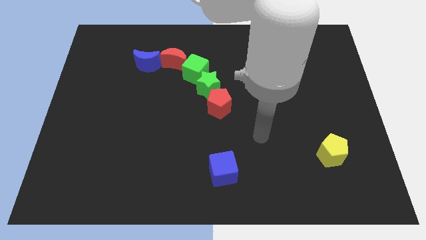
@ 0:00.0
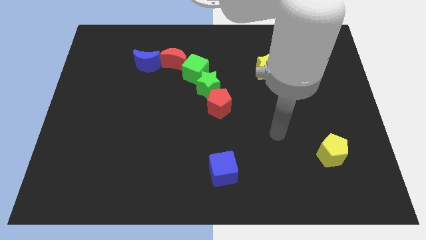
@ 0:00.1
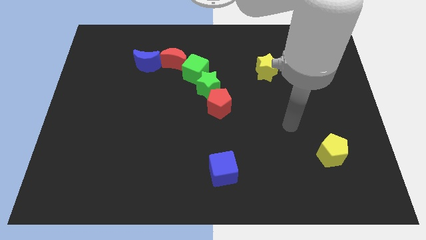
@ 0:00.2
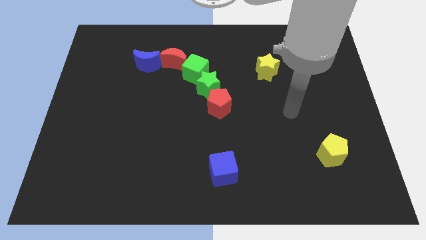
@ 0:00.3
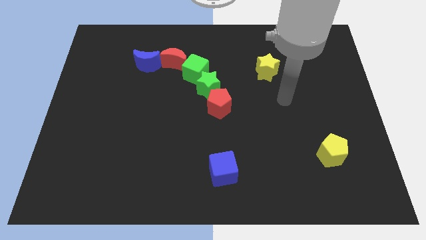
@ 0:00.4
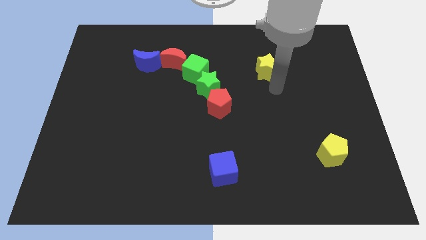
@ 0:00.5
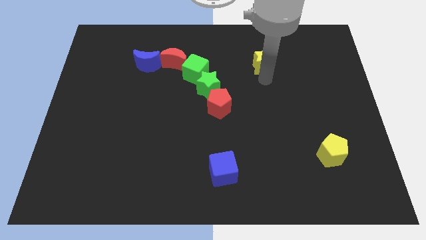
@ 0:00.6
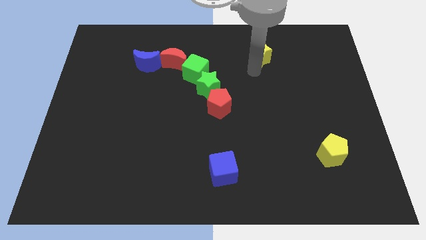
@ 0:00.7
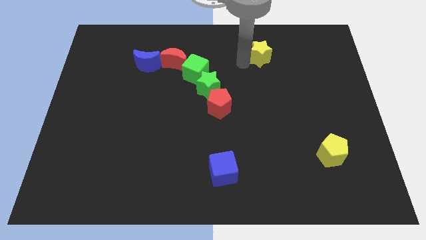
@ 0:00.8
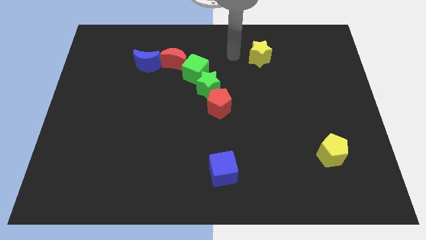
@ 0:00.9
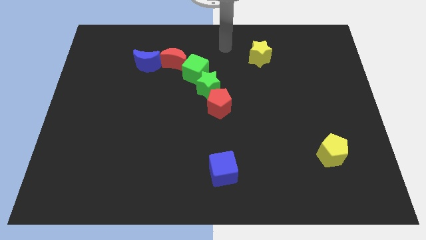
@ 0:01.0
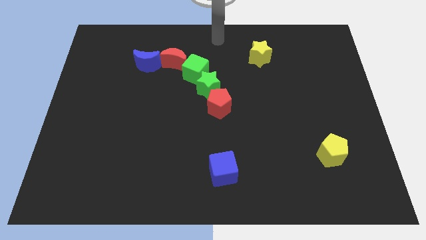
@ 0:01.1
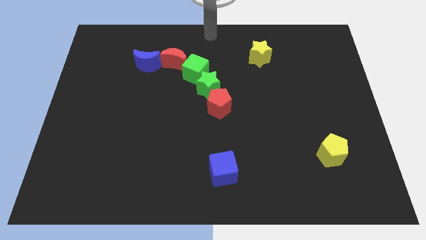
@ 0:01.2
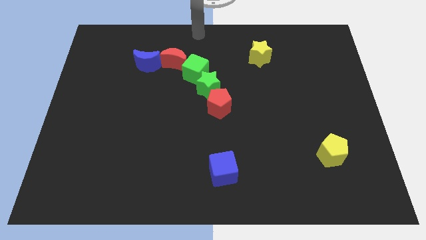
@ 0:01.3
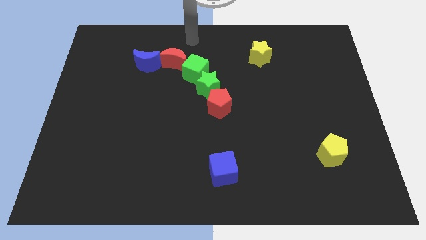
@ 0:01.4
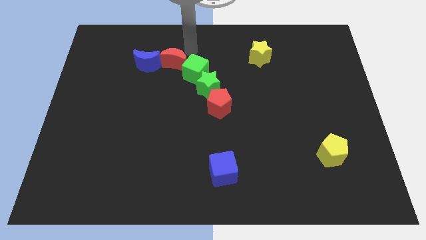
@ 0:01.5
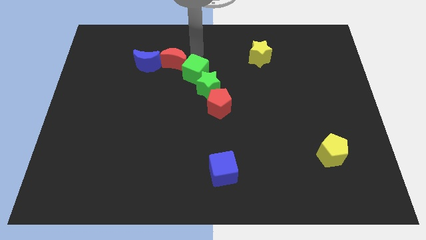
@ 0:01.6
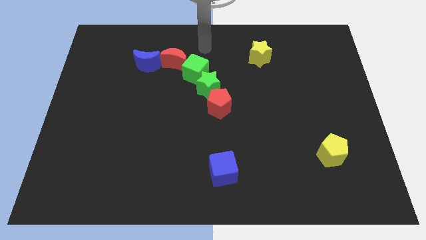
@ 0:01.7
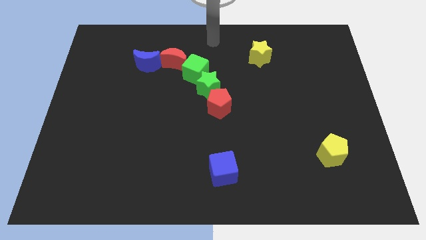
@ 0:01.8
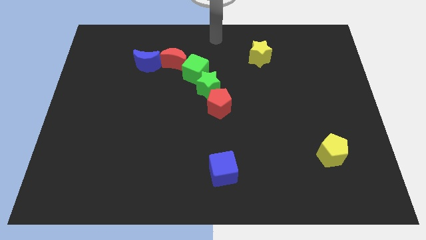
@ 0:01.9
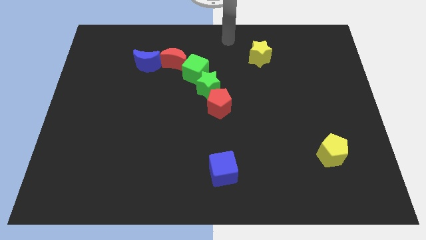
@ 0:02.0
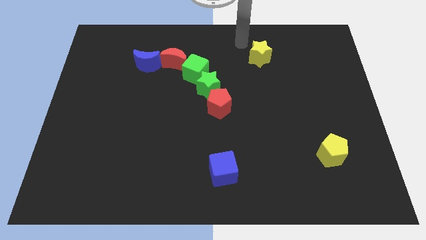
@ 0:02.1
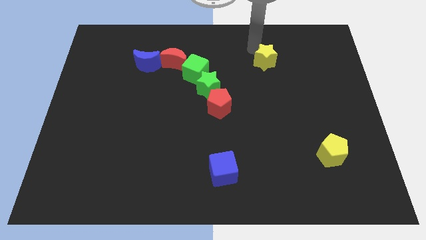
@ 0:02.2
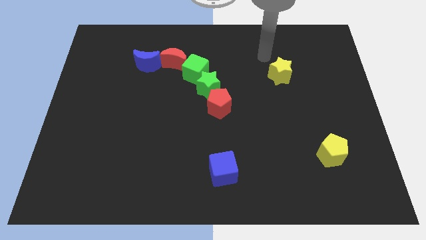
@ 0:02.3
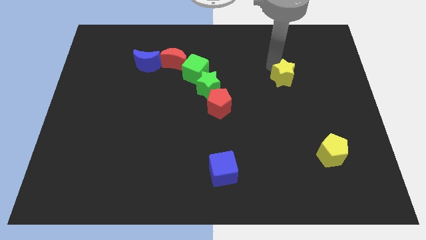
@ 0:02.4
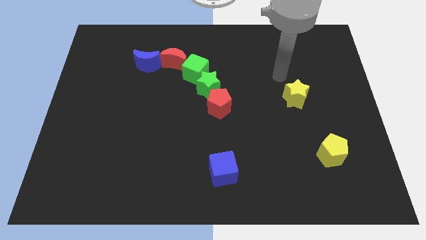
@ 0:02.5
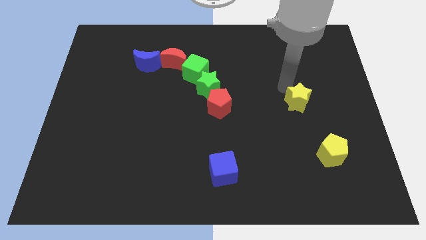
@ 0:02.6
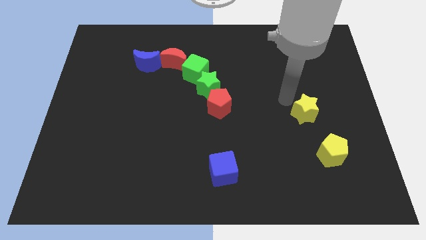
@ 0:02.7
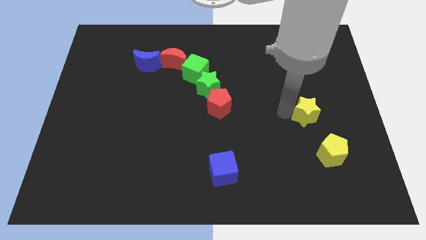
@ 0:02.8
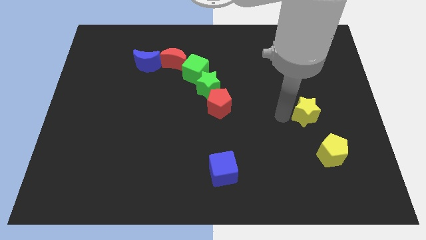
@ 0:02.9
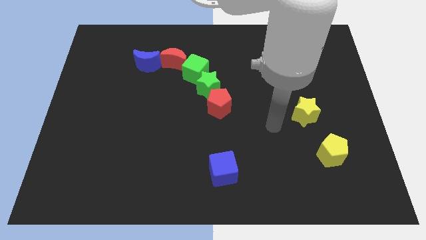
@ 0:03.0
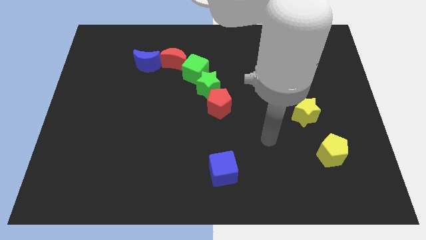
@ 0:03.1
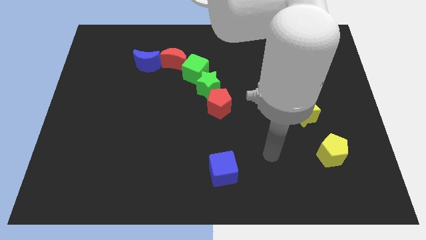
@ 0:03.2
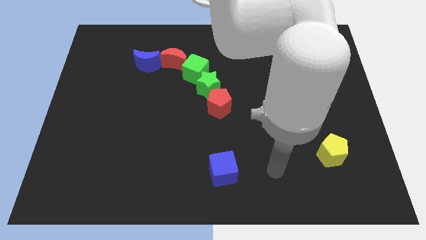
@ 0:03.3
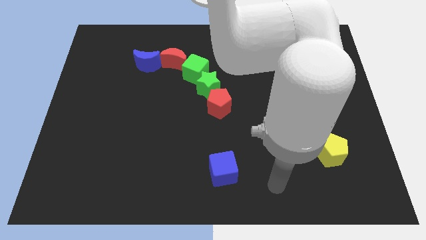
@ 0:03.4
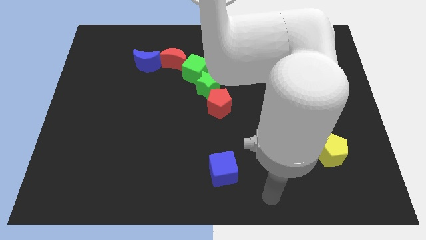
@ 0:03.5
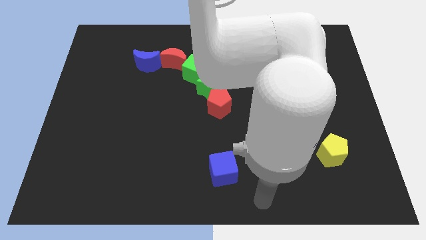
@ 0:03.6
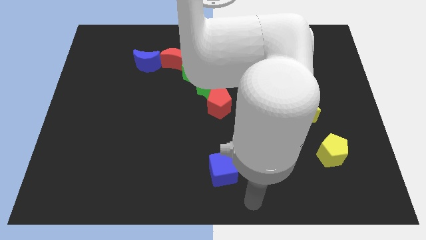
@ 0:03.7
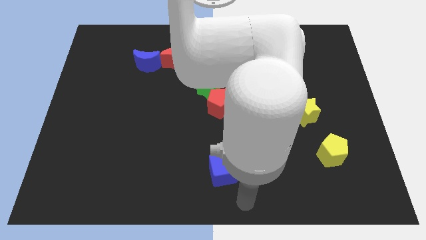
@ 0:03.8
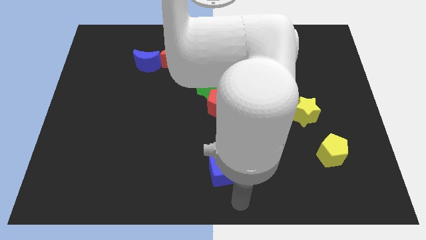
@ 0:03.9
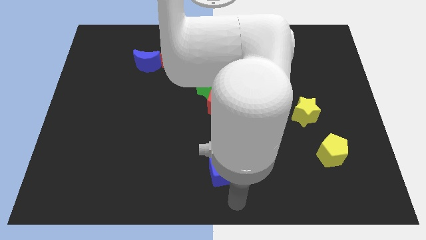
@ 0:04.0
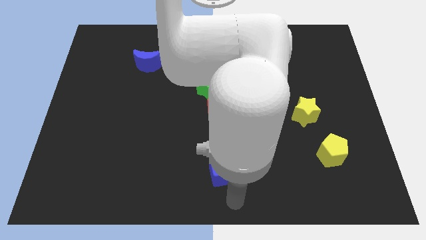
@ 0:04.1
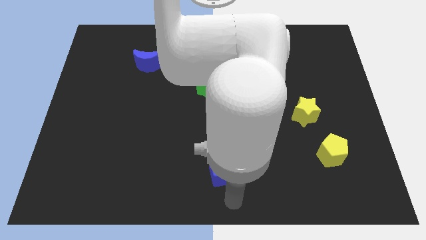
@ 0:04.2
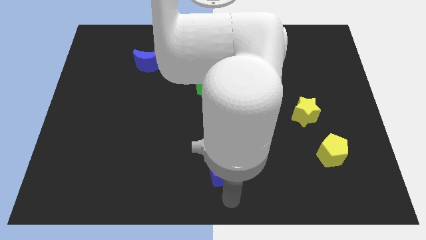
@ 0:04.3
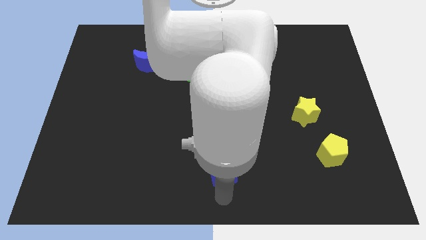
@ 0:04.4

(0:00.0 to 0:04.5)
place the yellow star above the yellow pentagon

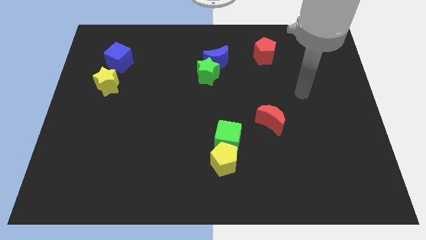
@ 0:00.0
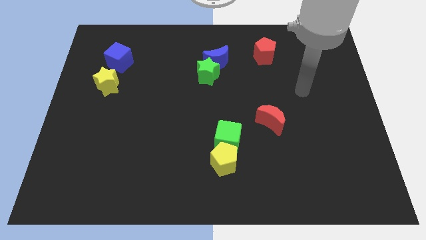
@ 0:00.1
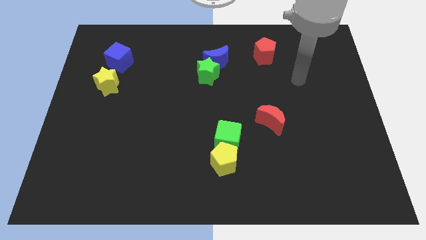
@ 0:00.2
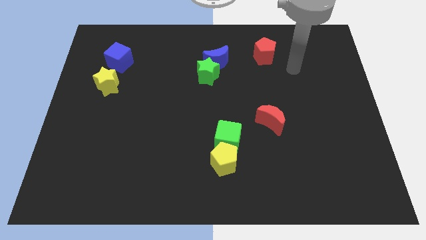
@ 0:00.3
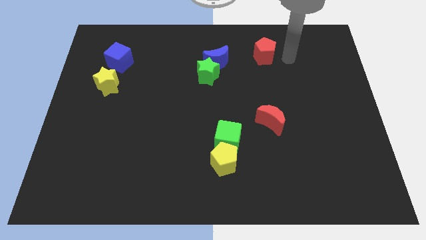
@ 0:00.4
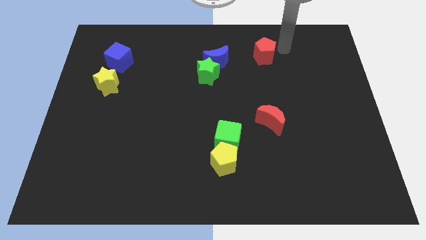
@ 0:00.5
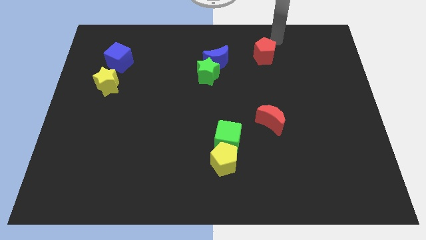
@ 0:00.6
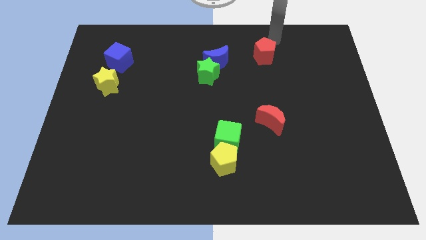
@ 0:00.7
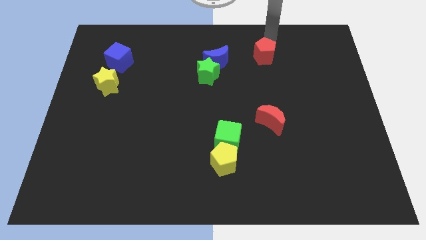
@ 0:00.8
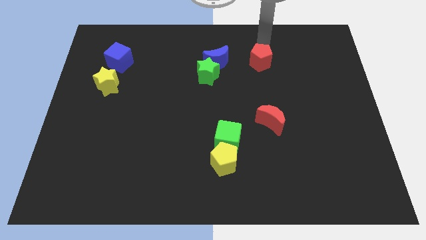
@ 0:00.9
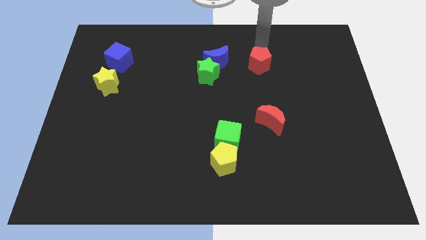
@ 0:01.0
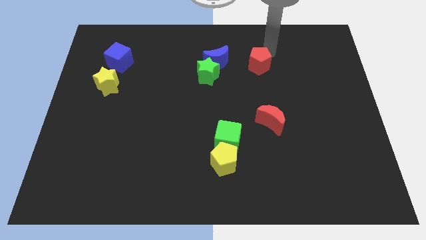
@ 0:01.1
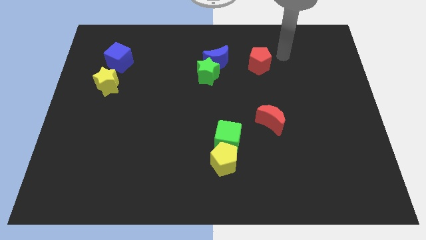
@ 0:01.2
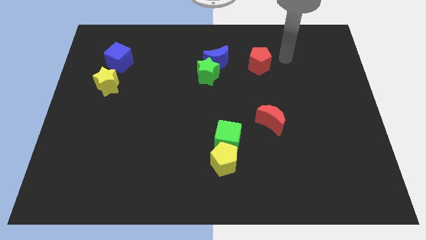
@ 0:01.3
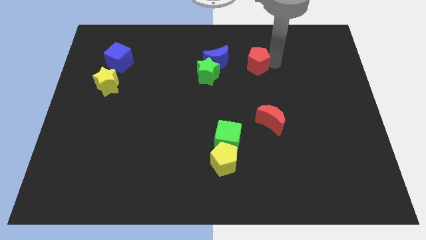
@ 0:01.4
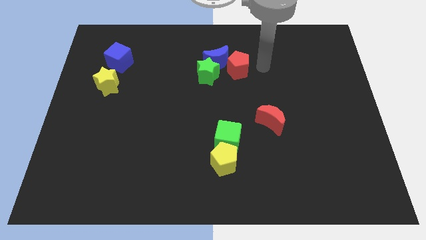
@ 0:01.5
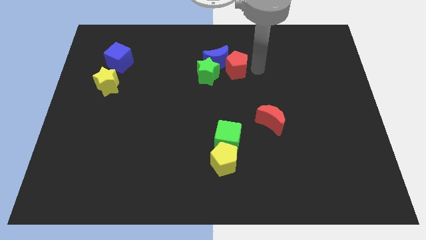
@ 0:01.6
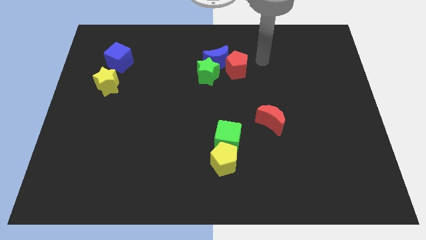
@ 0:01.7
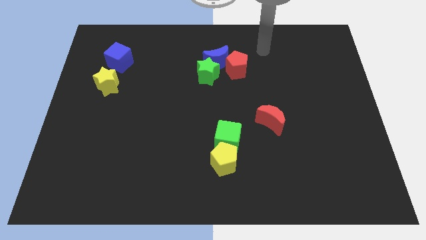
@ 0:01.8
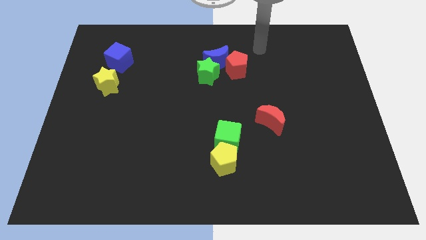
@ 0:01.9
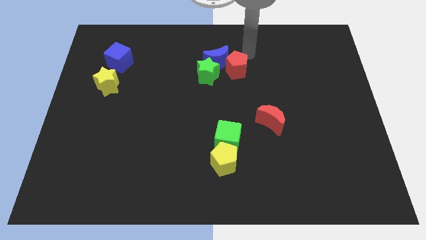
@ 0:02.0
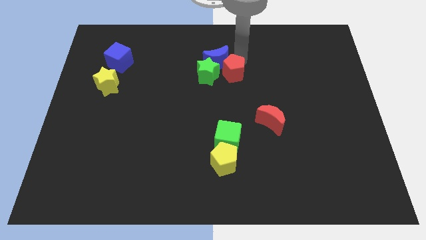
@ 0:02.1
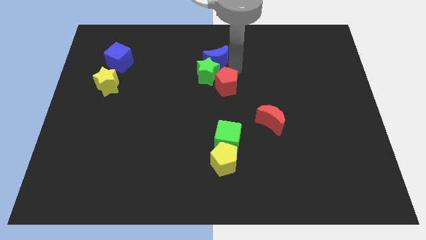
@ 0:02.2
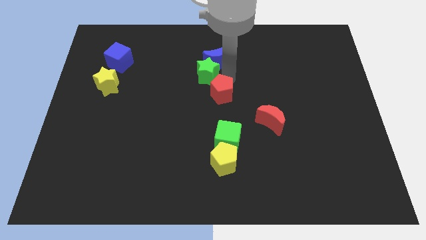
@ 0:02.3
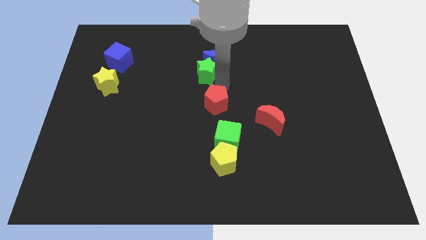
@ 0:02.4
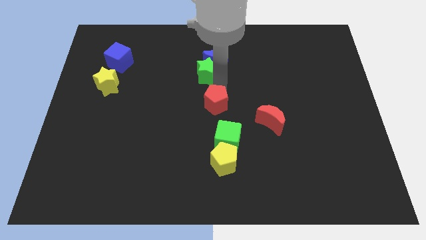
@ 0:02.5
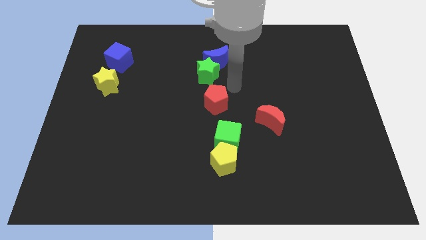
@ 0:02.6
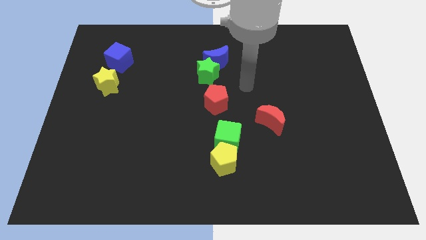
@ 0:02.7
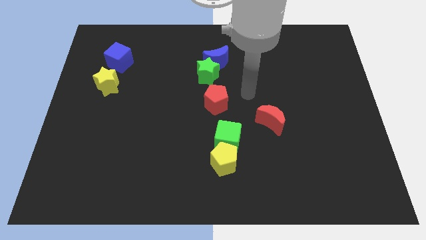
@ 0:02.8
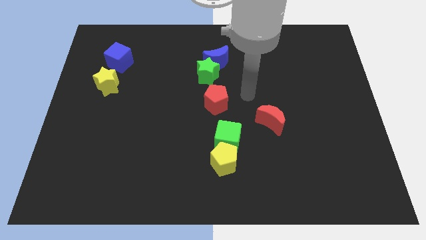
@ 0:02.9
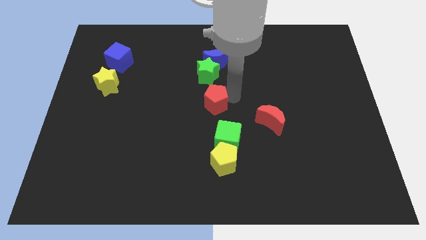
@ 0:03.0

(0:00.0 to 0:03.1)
push the red pentagon in between green star and green cube

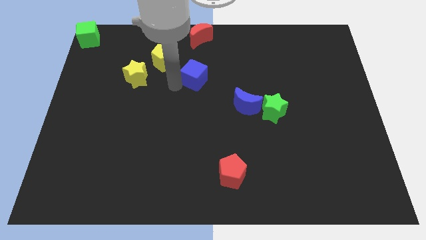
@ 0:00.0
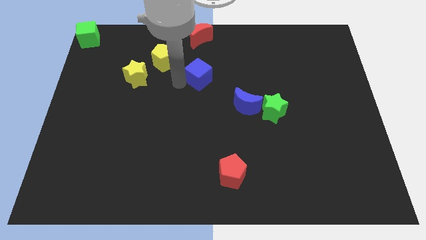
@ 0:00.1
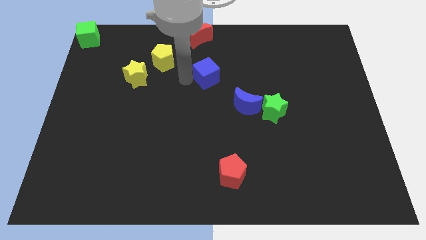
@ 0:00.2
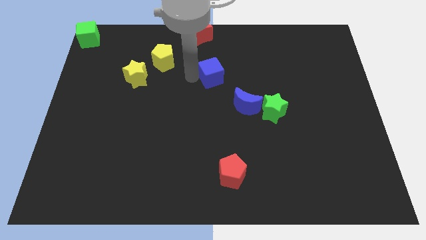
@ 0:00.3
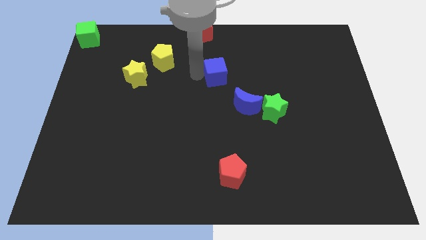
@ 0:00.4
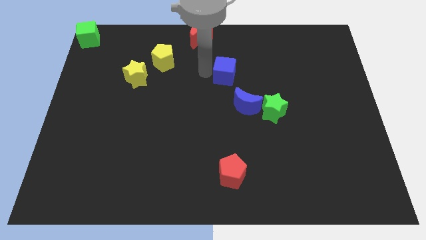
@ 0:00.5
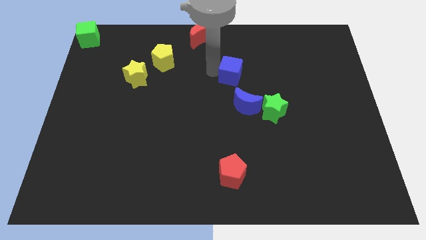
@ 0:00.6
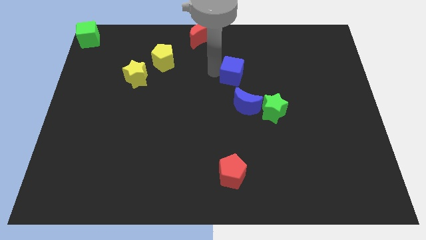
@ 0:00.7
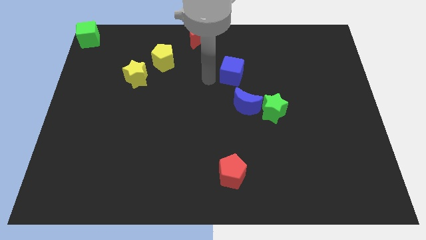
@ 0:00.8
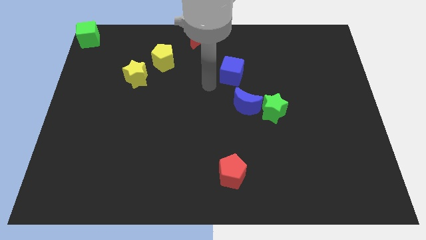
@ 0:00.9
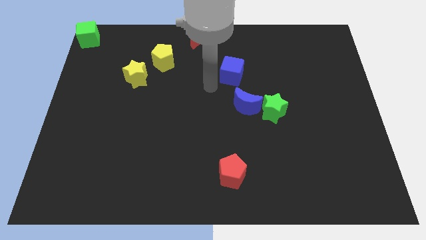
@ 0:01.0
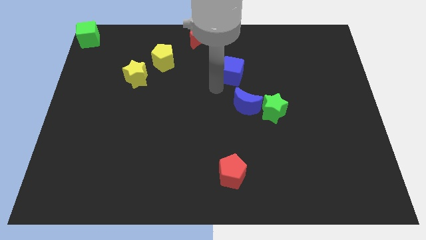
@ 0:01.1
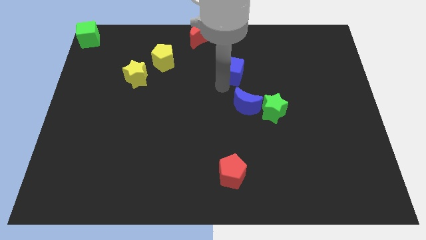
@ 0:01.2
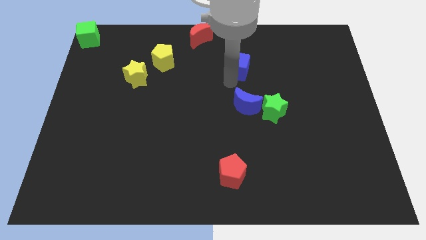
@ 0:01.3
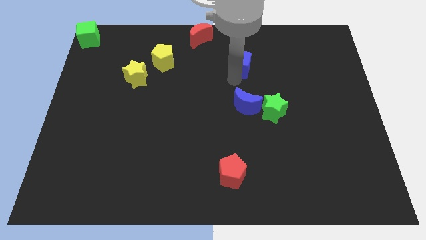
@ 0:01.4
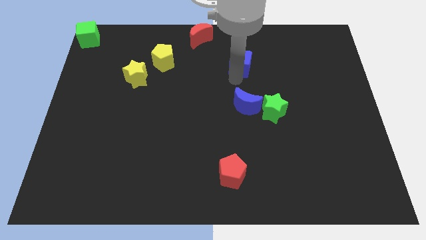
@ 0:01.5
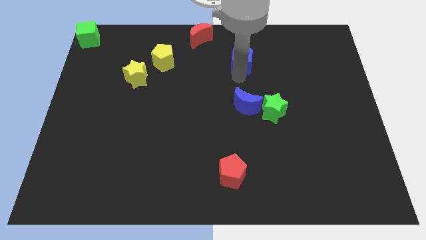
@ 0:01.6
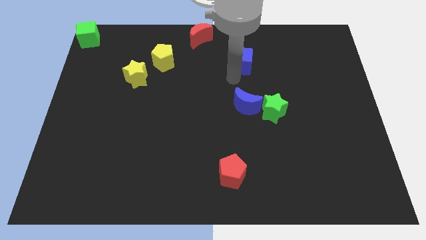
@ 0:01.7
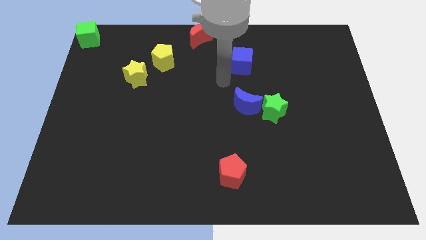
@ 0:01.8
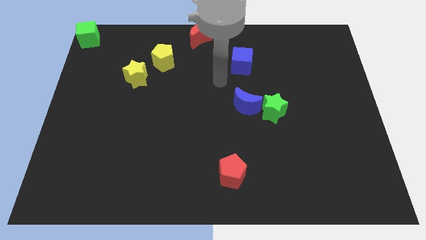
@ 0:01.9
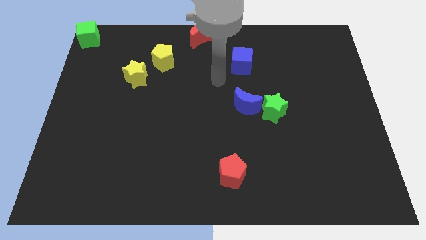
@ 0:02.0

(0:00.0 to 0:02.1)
move the blue cube vertically above the blue moon
